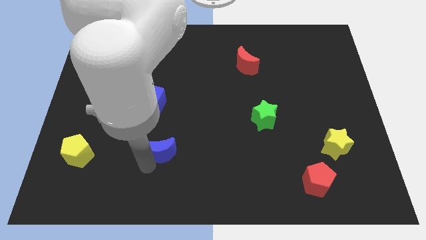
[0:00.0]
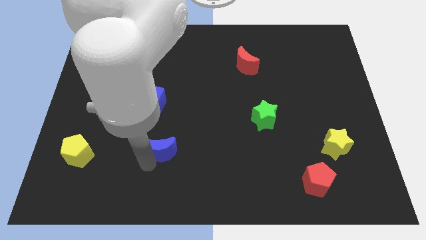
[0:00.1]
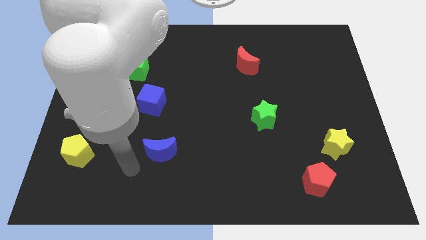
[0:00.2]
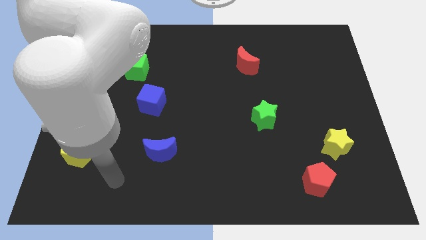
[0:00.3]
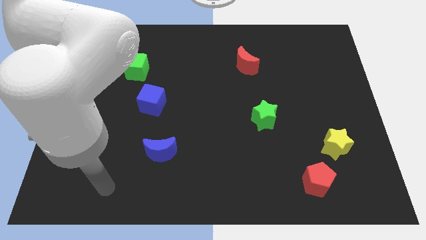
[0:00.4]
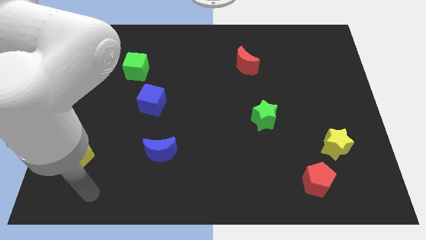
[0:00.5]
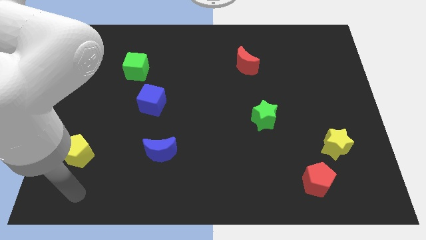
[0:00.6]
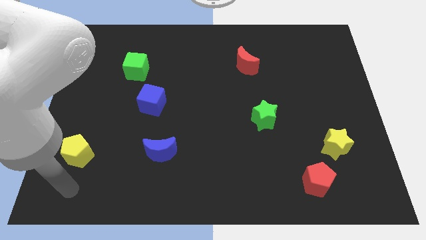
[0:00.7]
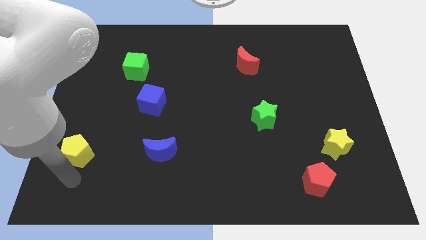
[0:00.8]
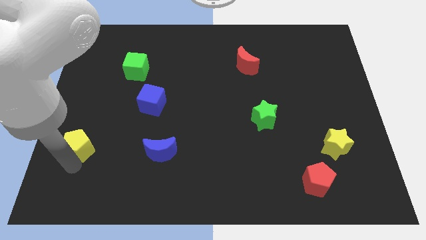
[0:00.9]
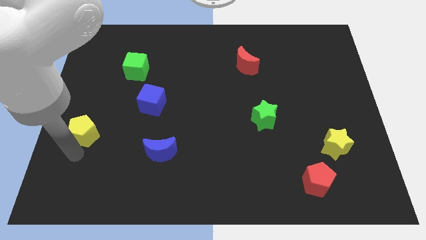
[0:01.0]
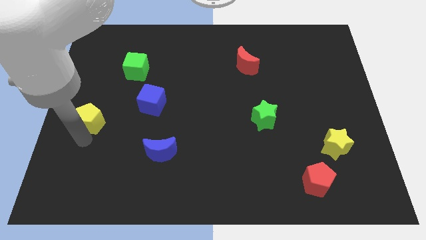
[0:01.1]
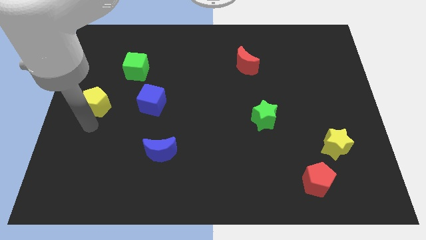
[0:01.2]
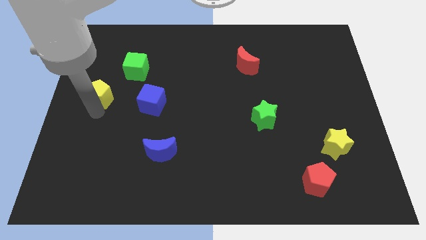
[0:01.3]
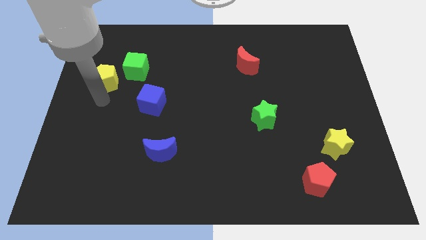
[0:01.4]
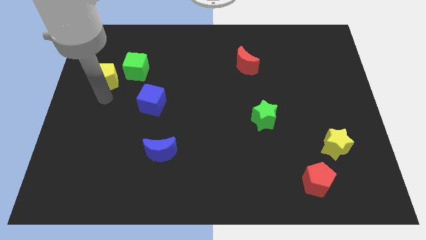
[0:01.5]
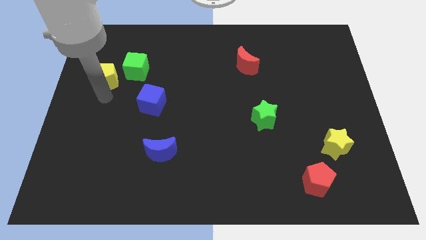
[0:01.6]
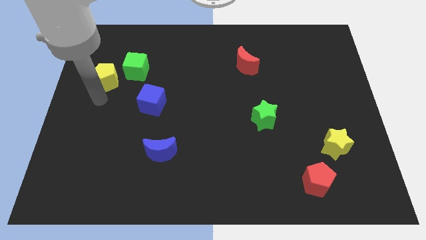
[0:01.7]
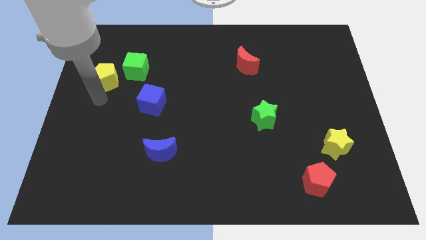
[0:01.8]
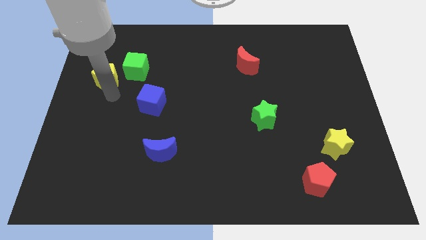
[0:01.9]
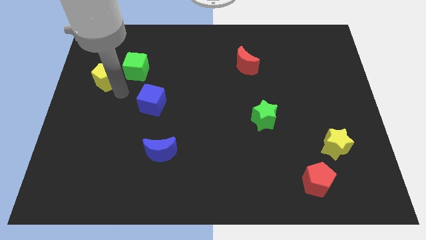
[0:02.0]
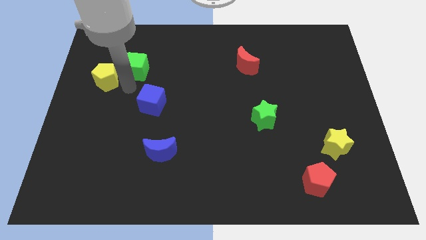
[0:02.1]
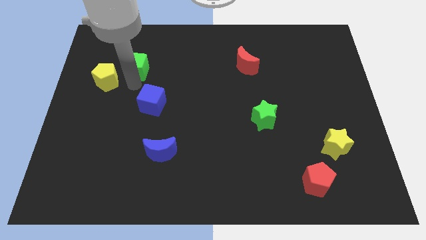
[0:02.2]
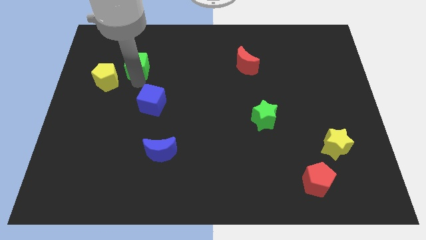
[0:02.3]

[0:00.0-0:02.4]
move the yellow pentagon to the bottom left of the green cube

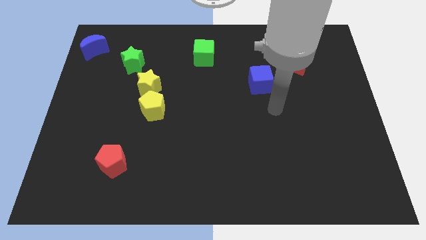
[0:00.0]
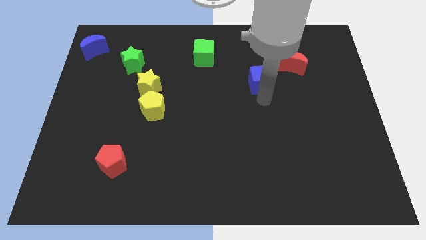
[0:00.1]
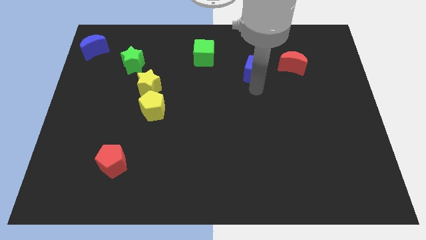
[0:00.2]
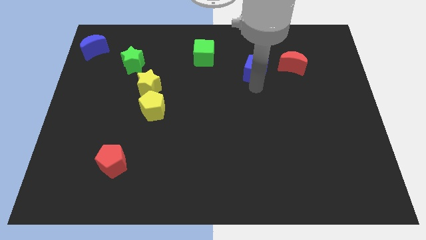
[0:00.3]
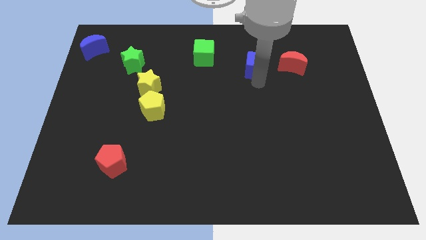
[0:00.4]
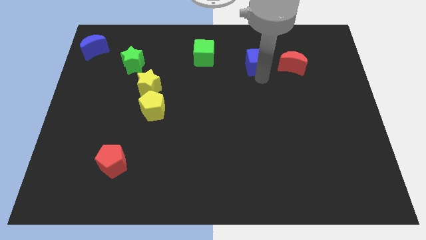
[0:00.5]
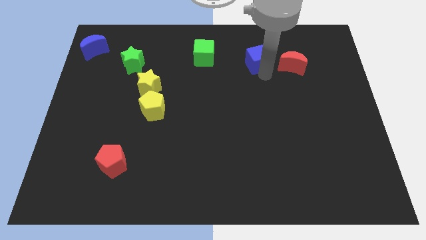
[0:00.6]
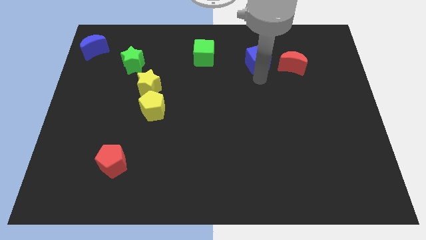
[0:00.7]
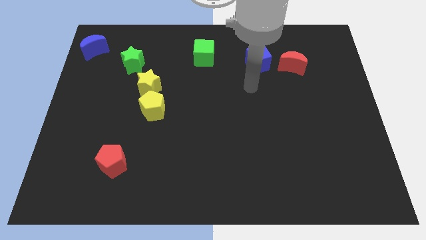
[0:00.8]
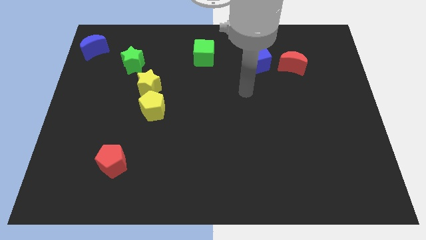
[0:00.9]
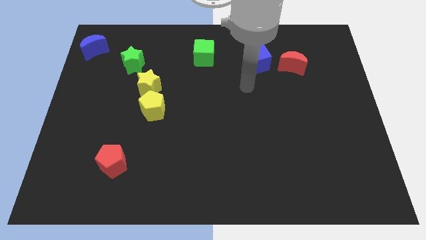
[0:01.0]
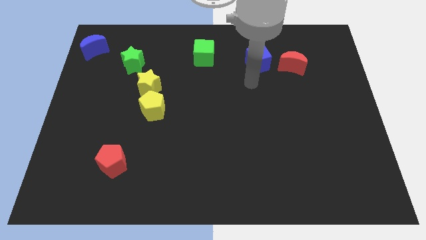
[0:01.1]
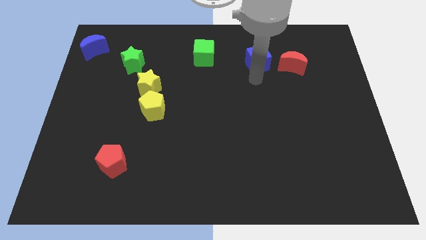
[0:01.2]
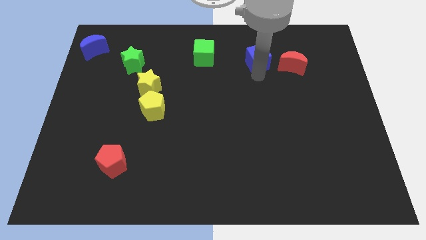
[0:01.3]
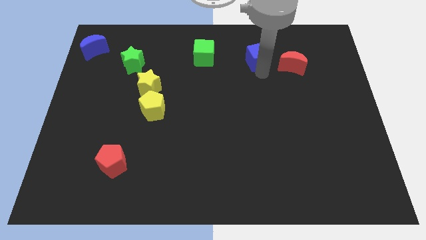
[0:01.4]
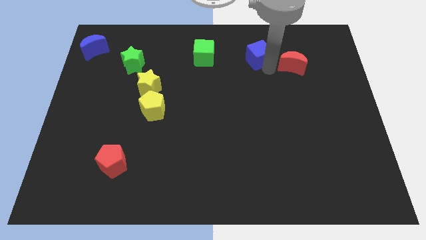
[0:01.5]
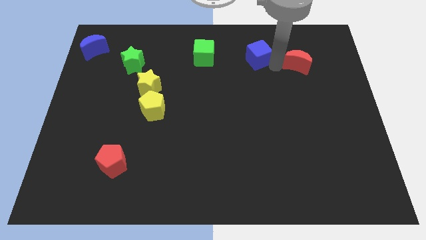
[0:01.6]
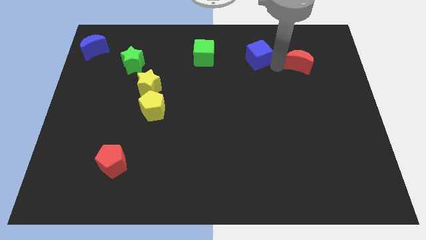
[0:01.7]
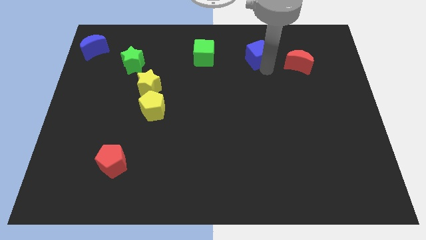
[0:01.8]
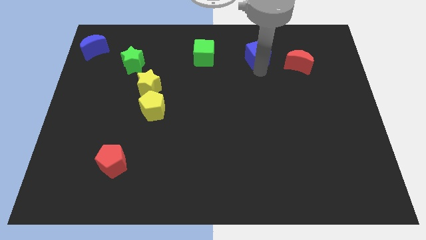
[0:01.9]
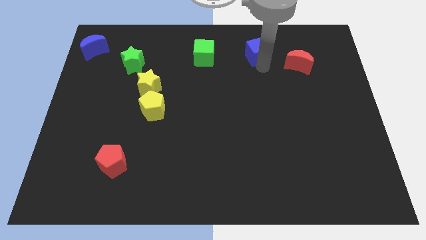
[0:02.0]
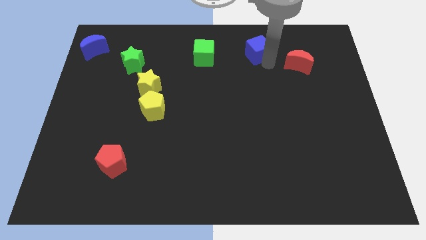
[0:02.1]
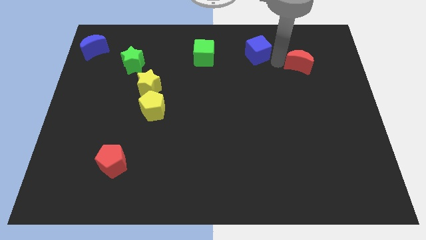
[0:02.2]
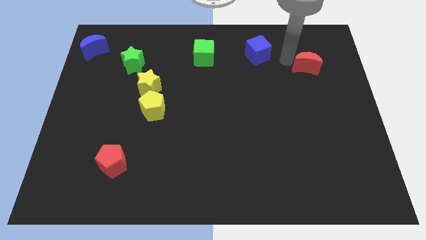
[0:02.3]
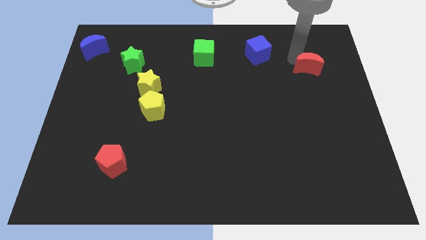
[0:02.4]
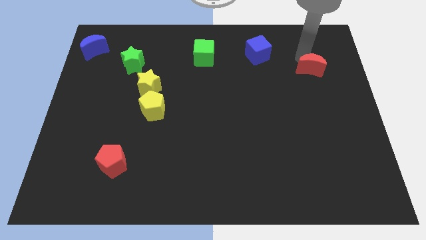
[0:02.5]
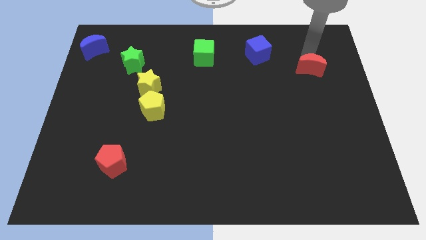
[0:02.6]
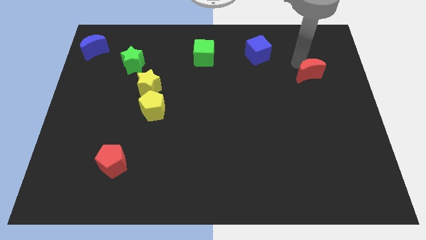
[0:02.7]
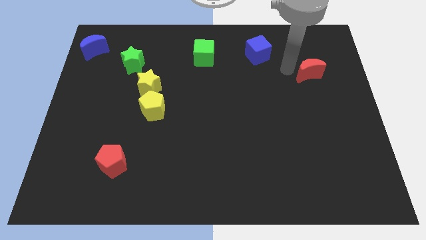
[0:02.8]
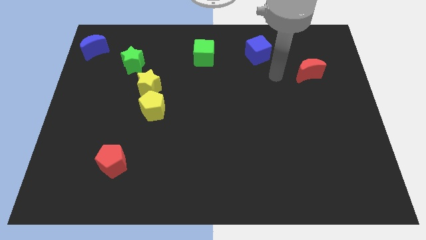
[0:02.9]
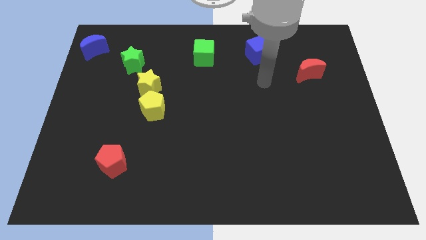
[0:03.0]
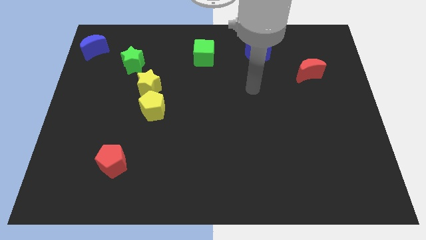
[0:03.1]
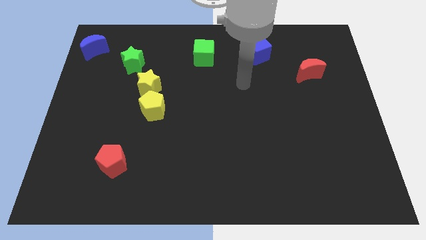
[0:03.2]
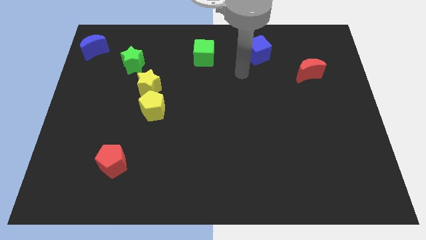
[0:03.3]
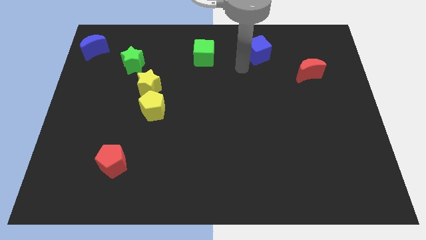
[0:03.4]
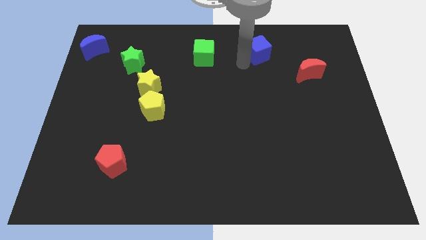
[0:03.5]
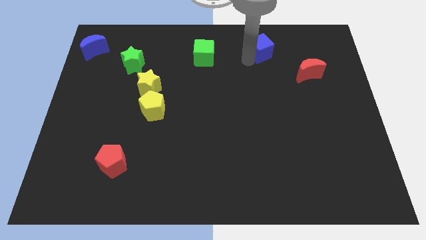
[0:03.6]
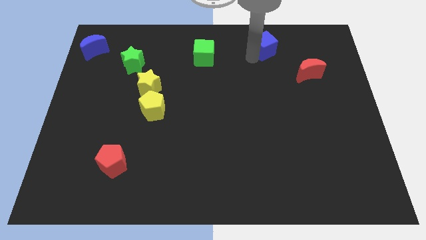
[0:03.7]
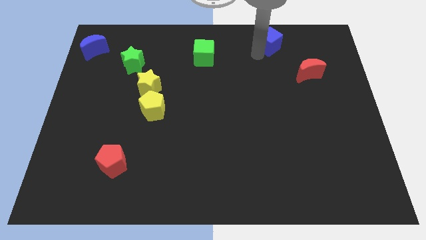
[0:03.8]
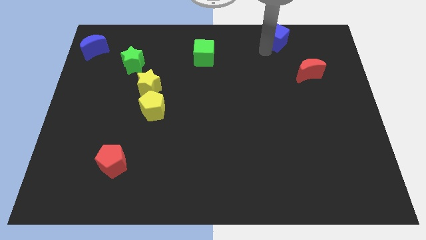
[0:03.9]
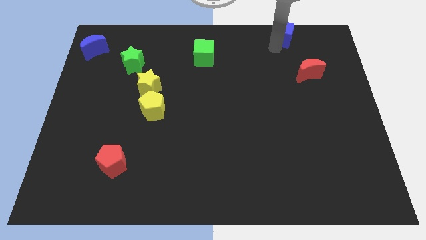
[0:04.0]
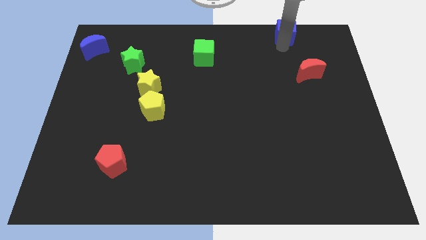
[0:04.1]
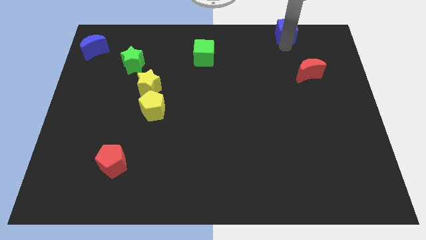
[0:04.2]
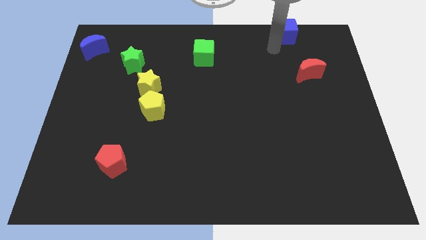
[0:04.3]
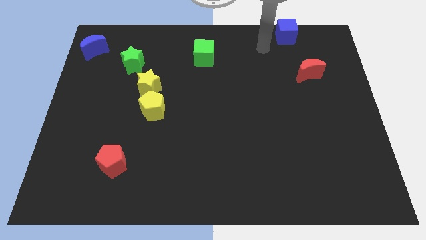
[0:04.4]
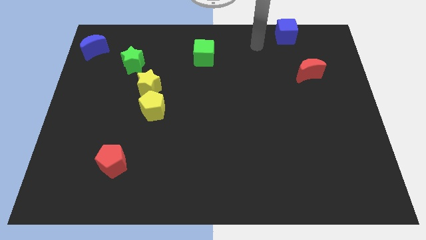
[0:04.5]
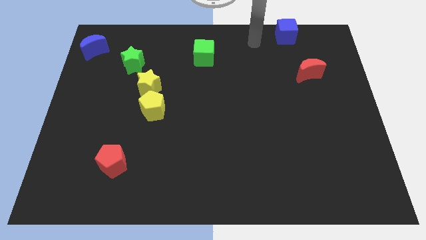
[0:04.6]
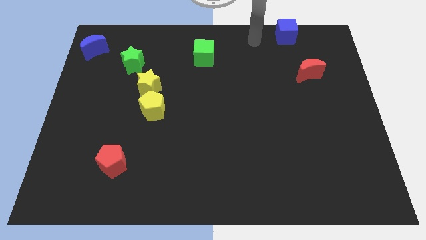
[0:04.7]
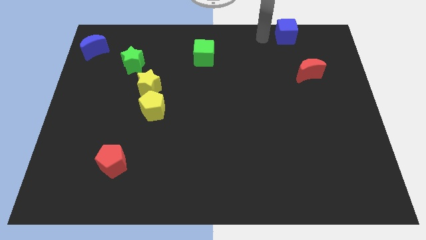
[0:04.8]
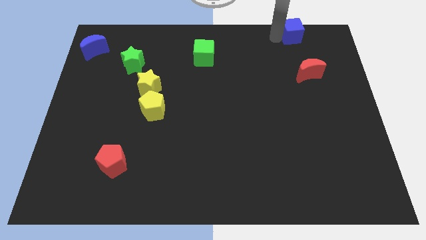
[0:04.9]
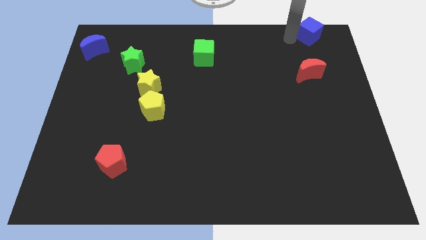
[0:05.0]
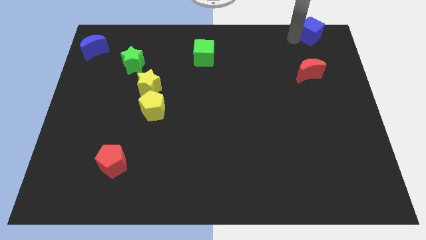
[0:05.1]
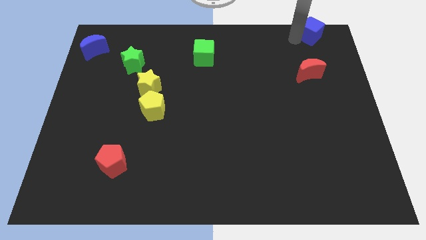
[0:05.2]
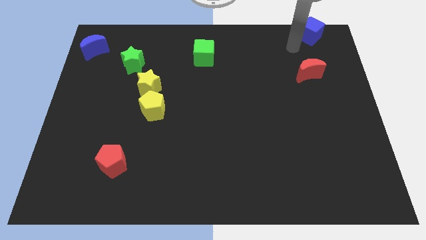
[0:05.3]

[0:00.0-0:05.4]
move the blue cube vertically above the red moon

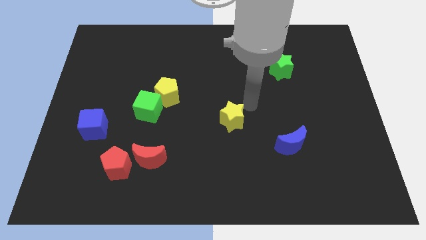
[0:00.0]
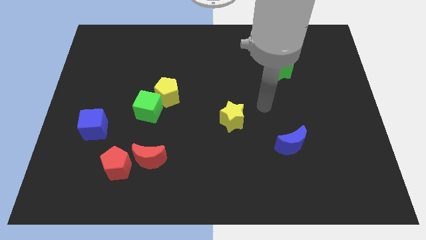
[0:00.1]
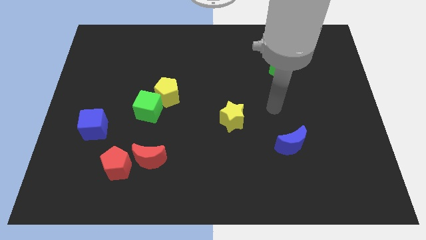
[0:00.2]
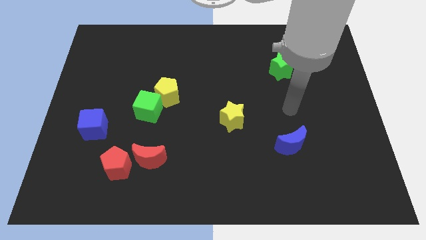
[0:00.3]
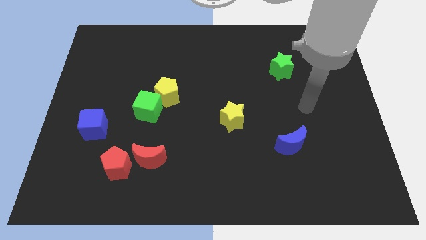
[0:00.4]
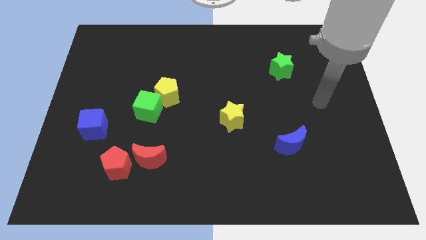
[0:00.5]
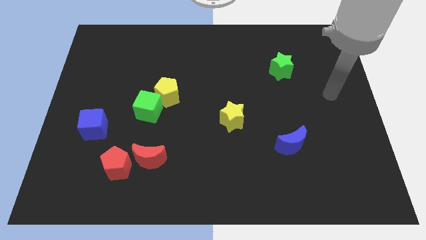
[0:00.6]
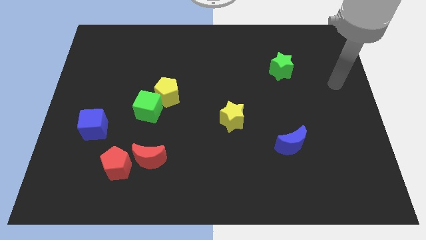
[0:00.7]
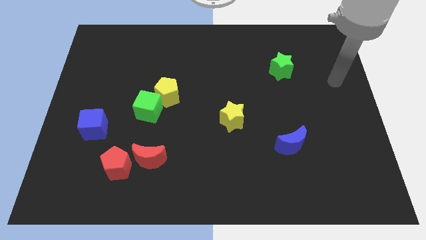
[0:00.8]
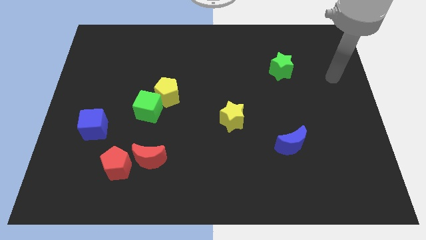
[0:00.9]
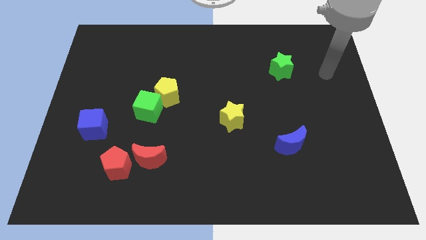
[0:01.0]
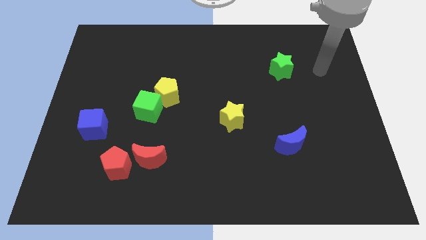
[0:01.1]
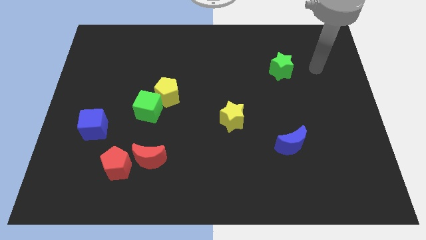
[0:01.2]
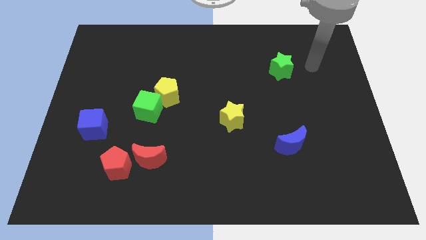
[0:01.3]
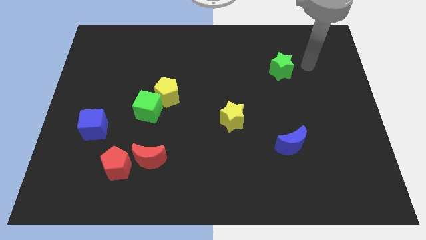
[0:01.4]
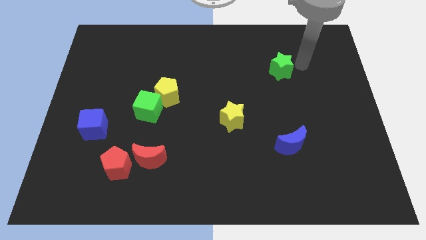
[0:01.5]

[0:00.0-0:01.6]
point your arm at the right of the green star
